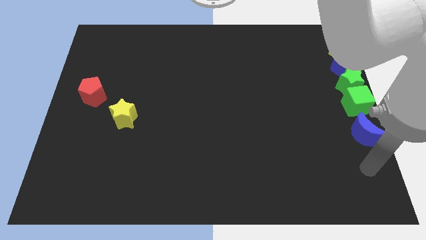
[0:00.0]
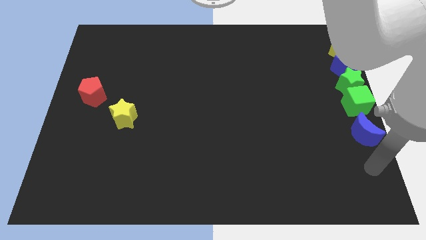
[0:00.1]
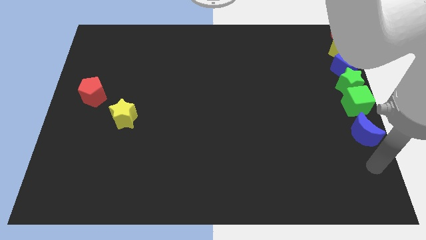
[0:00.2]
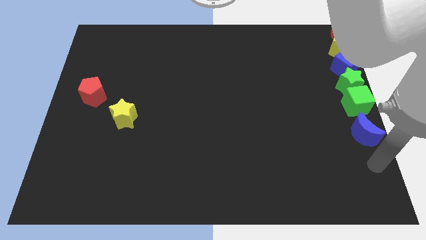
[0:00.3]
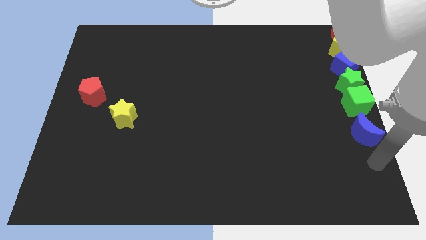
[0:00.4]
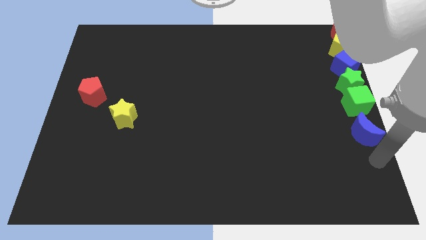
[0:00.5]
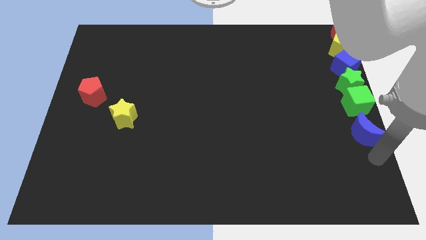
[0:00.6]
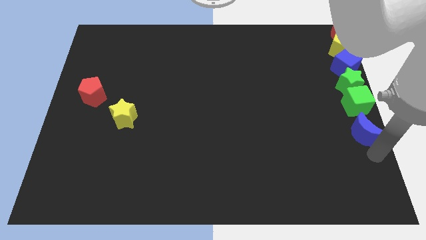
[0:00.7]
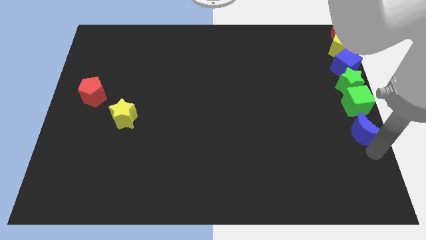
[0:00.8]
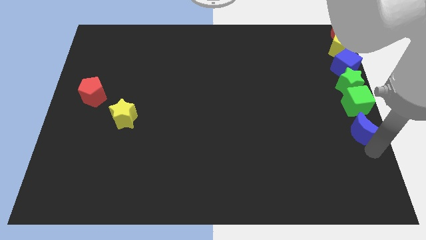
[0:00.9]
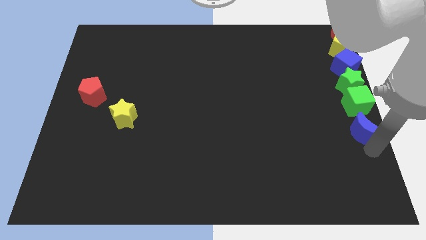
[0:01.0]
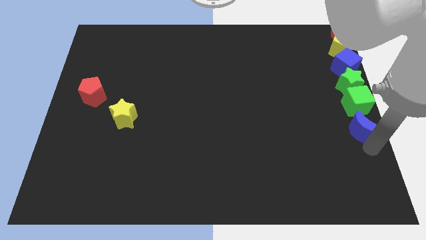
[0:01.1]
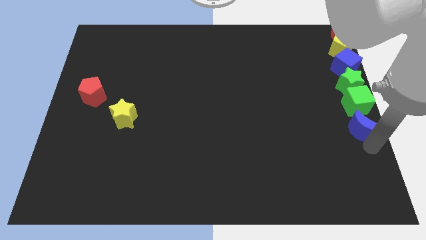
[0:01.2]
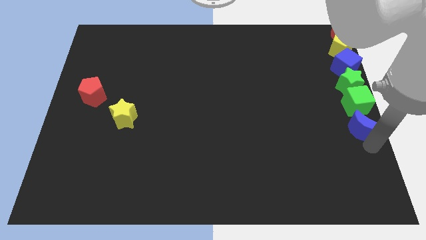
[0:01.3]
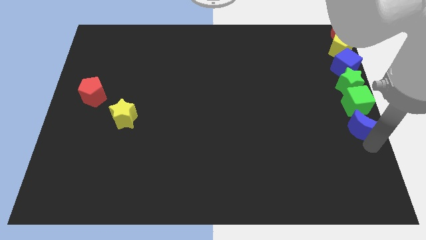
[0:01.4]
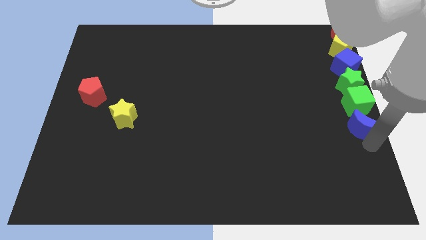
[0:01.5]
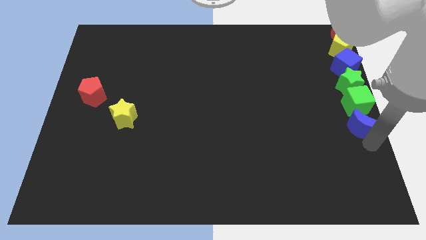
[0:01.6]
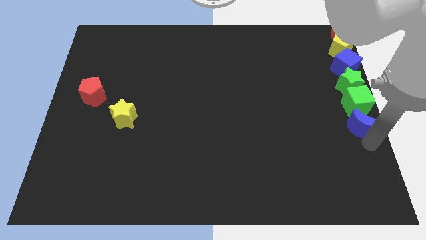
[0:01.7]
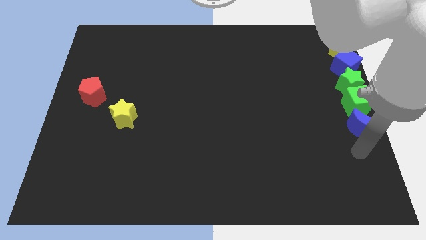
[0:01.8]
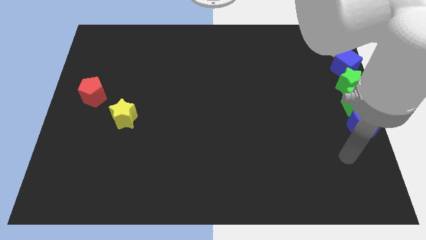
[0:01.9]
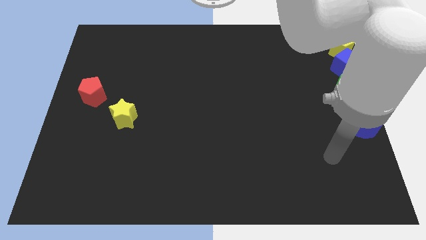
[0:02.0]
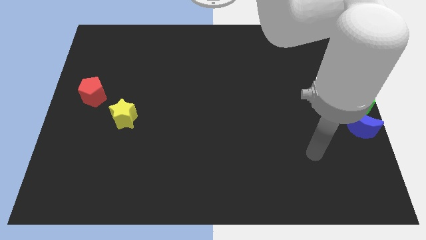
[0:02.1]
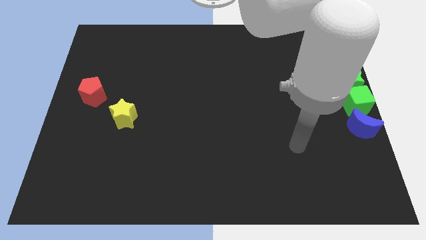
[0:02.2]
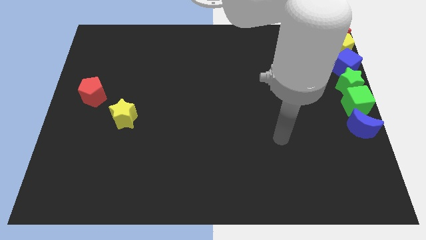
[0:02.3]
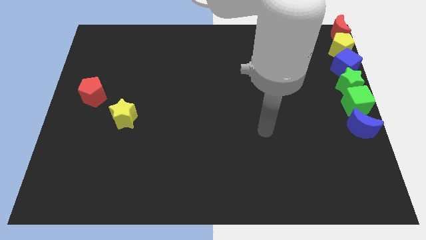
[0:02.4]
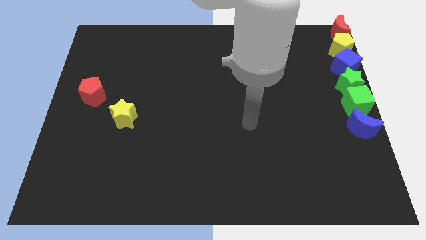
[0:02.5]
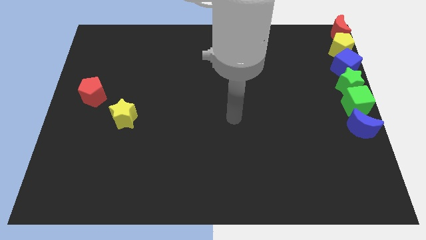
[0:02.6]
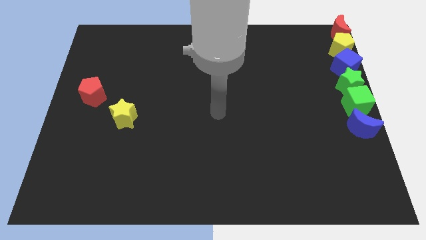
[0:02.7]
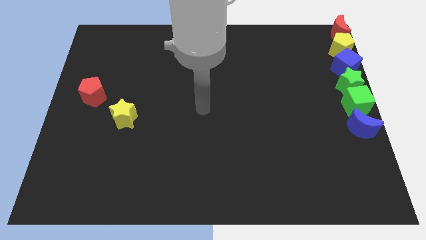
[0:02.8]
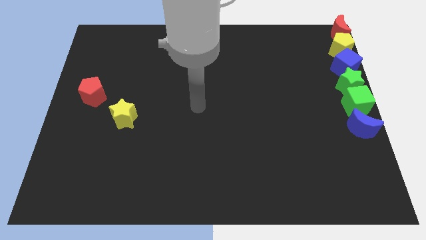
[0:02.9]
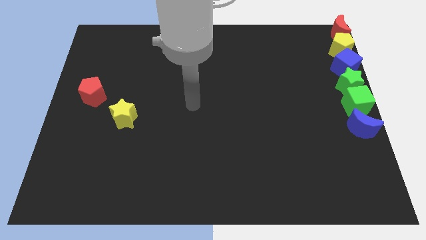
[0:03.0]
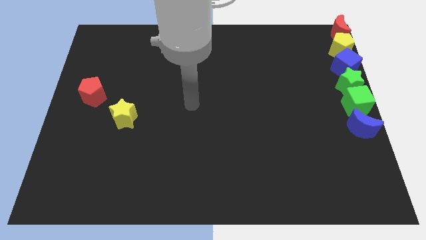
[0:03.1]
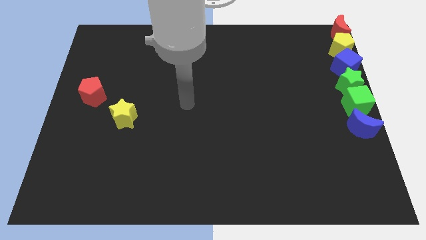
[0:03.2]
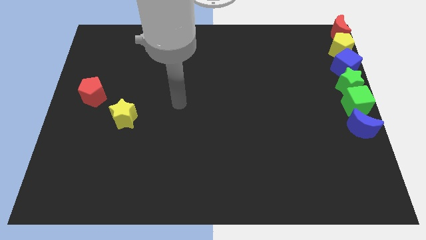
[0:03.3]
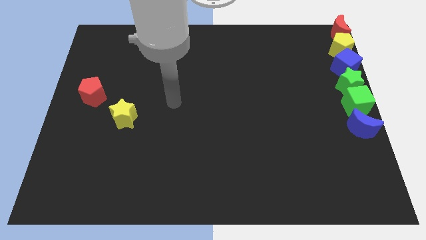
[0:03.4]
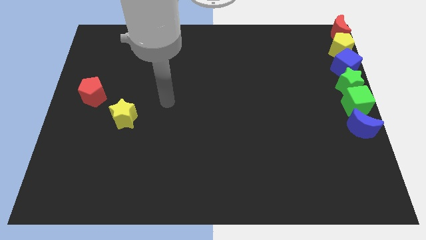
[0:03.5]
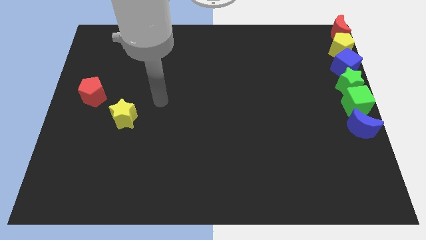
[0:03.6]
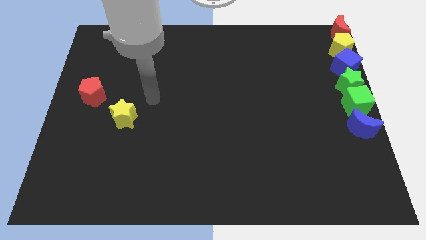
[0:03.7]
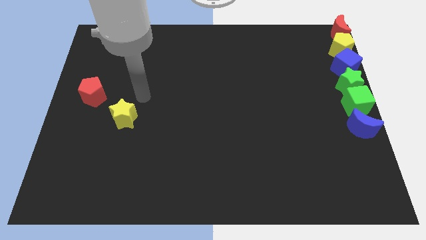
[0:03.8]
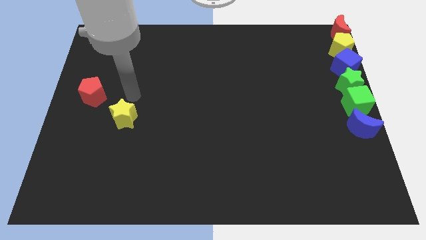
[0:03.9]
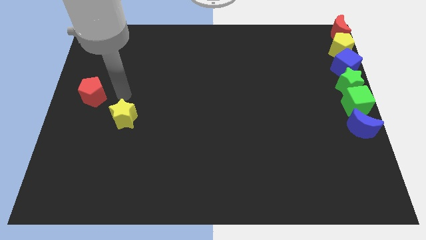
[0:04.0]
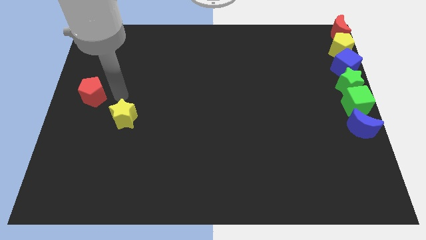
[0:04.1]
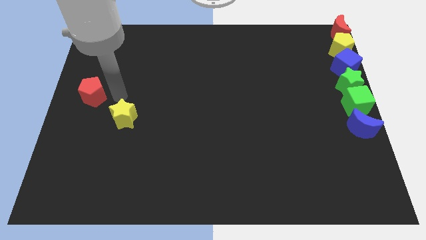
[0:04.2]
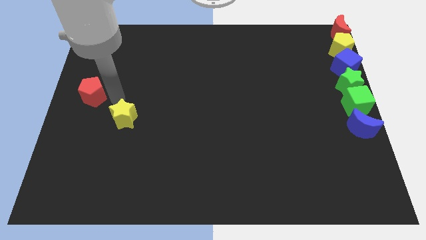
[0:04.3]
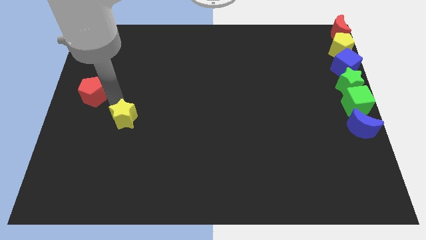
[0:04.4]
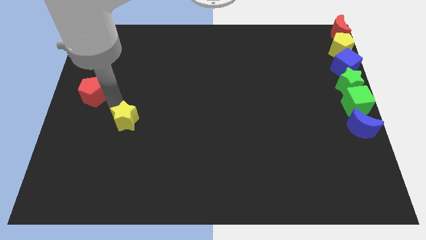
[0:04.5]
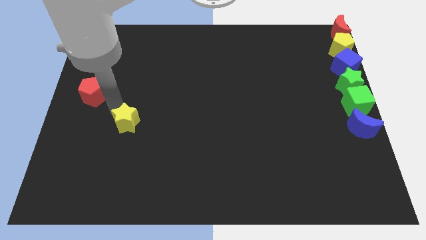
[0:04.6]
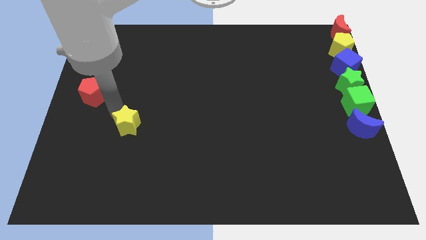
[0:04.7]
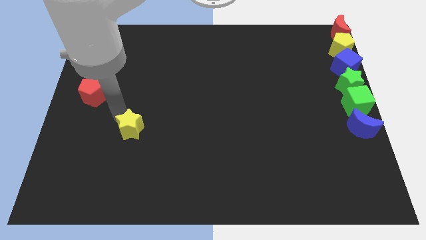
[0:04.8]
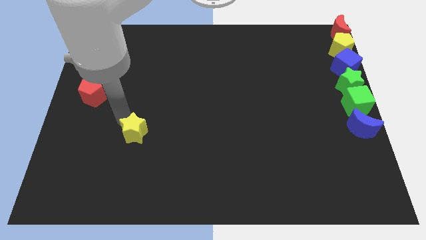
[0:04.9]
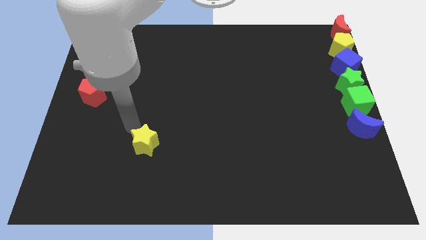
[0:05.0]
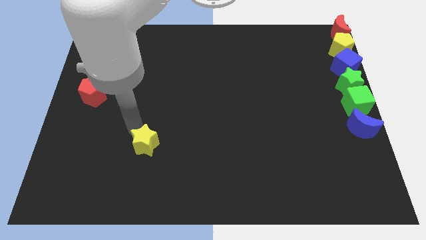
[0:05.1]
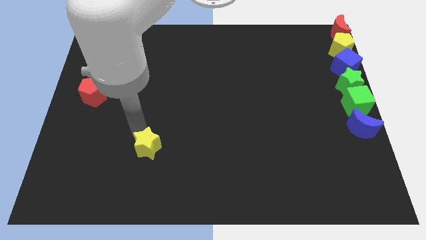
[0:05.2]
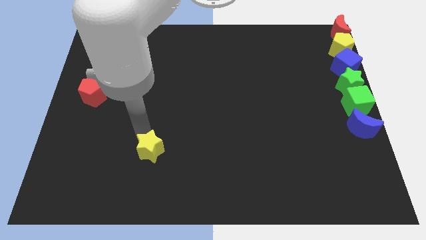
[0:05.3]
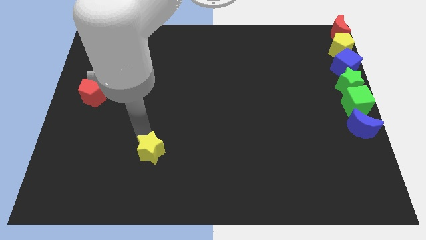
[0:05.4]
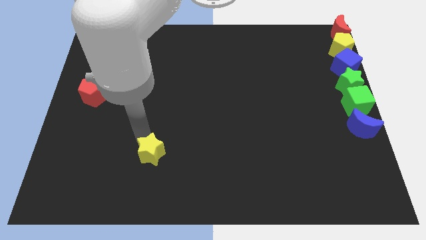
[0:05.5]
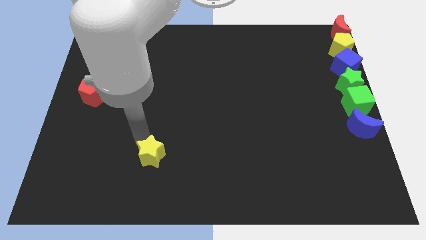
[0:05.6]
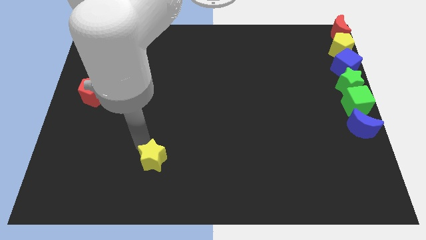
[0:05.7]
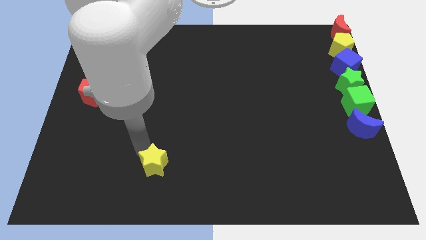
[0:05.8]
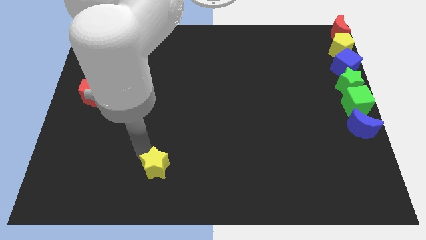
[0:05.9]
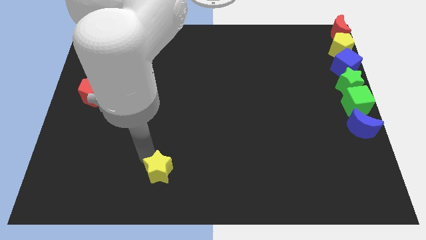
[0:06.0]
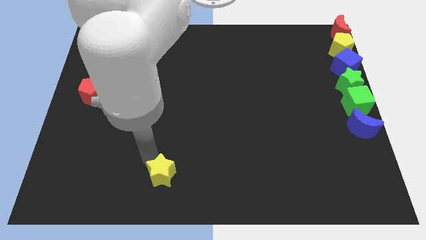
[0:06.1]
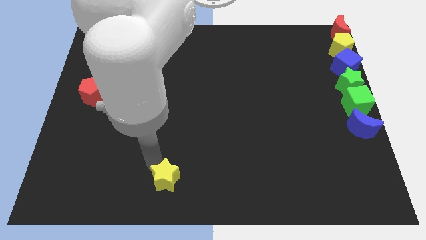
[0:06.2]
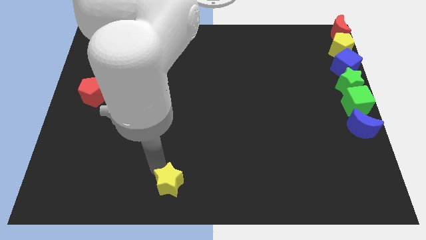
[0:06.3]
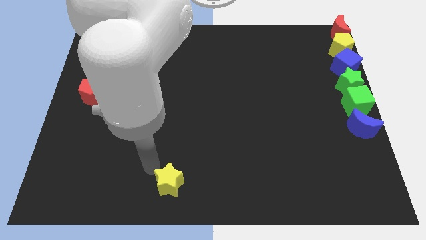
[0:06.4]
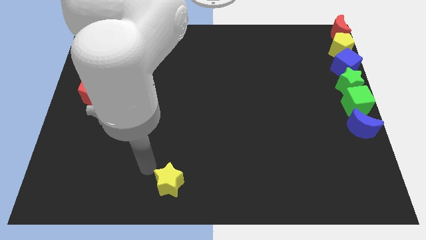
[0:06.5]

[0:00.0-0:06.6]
place the yellow star at the bottom center of the board

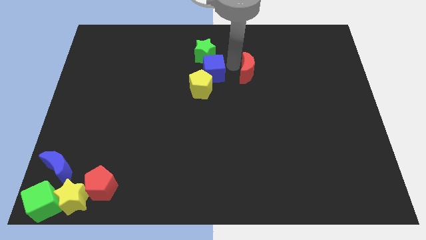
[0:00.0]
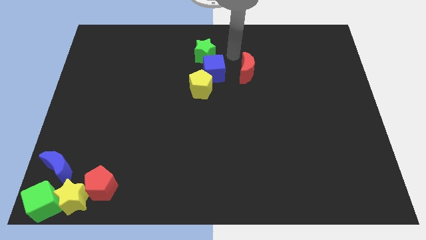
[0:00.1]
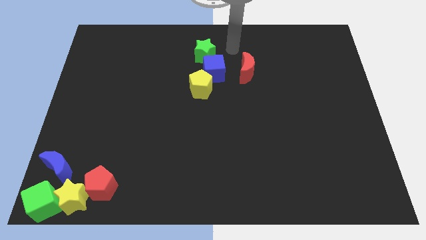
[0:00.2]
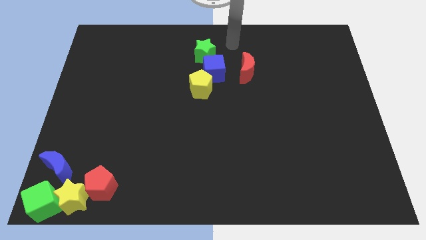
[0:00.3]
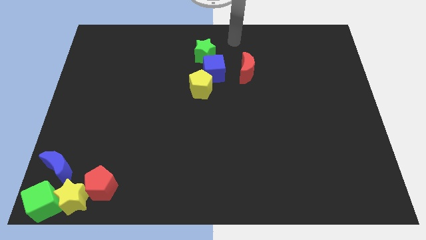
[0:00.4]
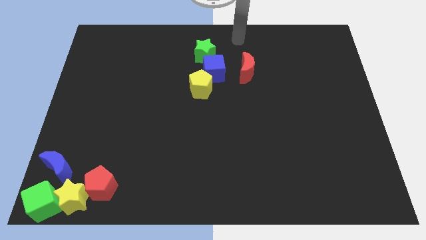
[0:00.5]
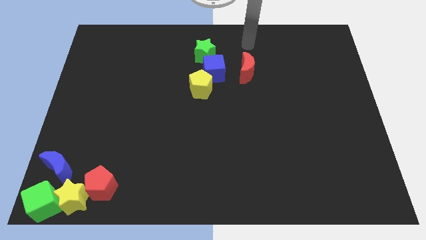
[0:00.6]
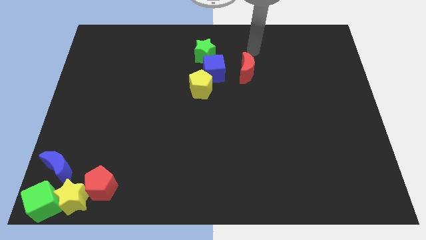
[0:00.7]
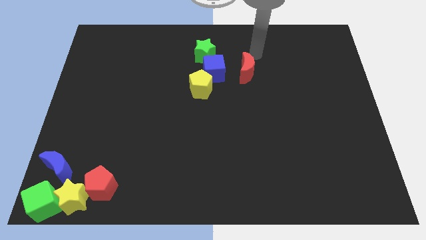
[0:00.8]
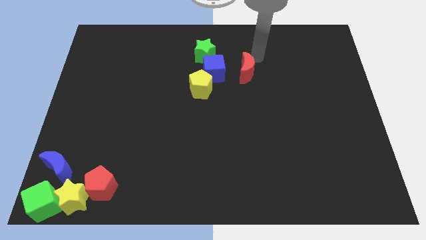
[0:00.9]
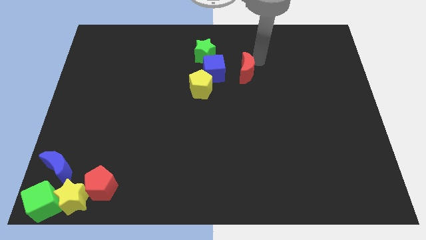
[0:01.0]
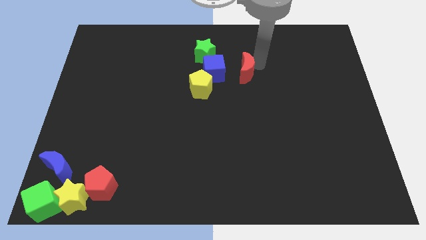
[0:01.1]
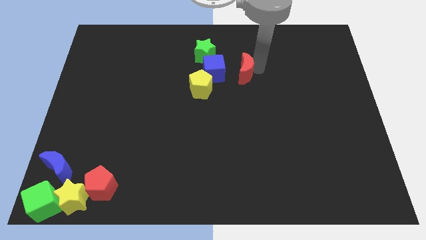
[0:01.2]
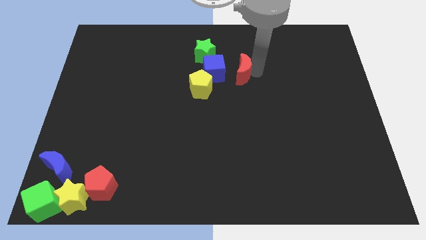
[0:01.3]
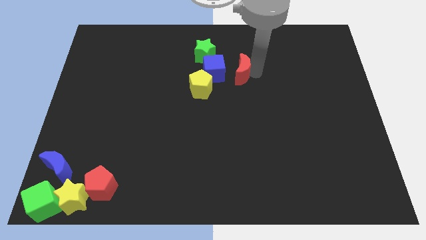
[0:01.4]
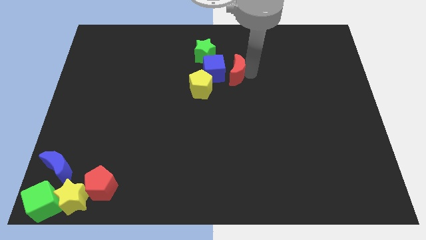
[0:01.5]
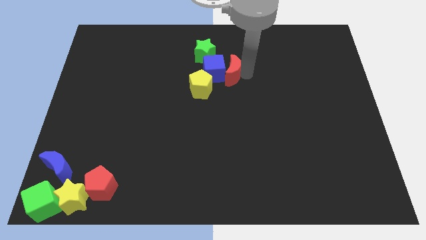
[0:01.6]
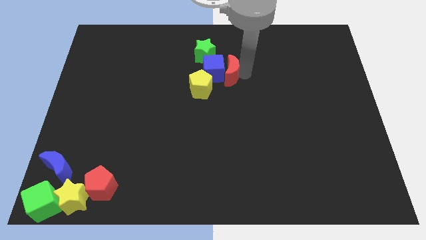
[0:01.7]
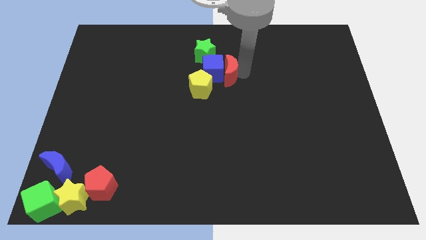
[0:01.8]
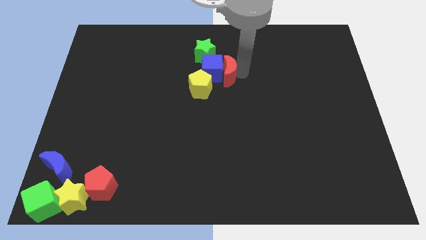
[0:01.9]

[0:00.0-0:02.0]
push the red moon towards the blue cube

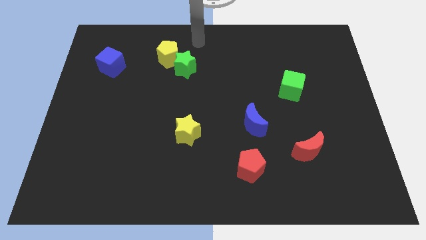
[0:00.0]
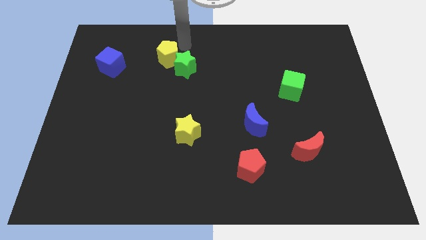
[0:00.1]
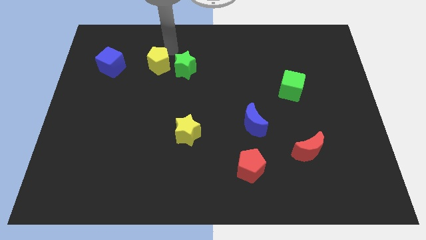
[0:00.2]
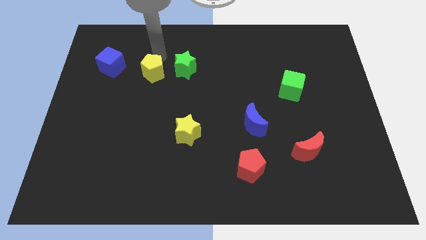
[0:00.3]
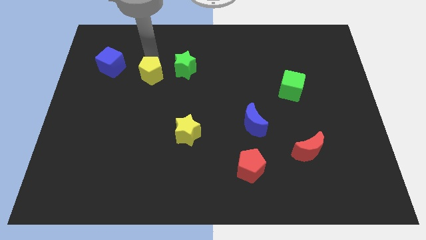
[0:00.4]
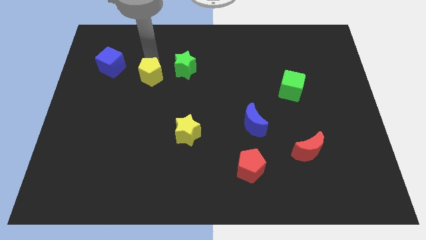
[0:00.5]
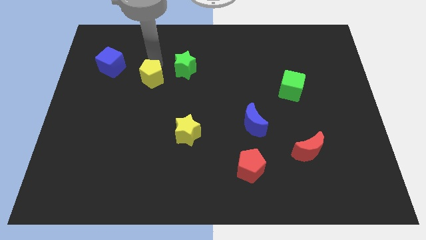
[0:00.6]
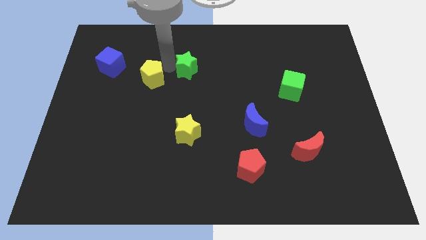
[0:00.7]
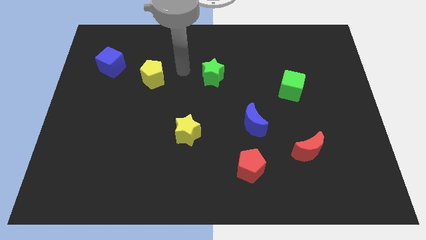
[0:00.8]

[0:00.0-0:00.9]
separate the yellow pentagon from the green star
